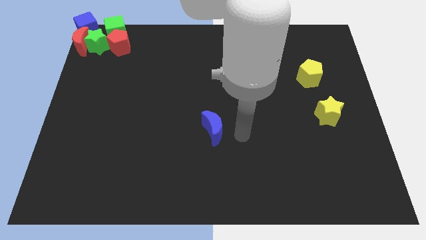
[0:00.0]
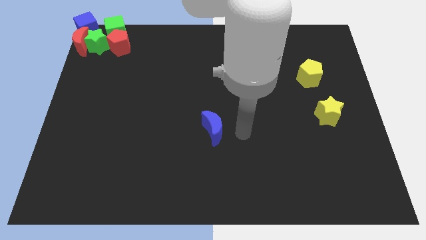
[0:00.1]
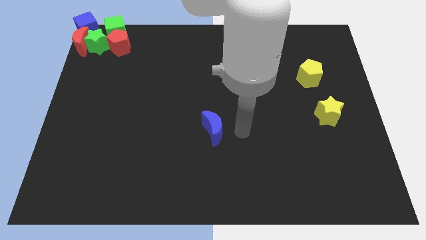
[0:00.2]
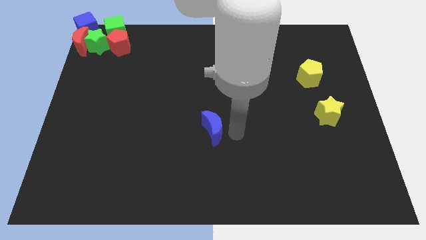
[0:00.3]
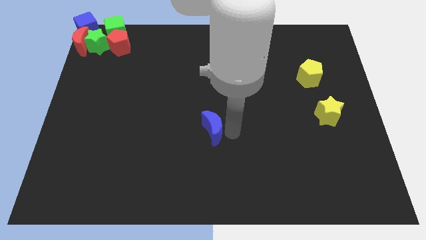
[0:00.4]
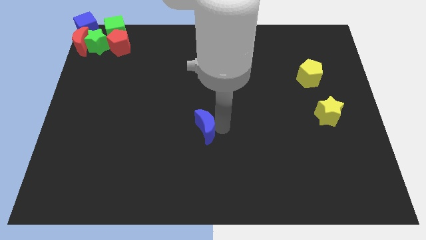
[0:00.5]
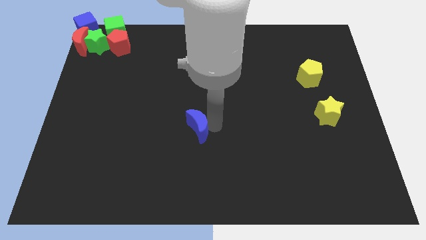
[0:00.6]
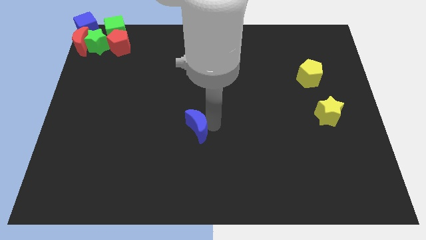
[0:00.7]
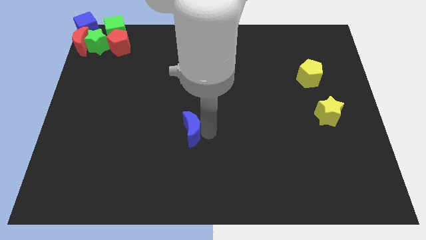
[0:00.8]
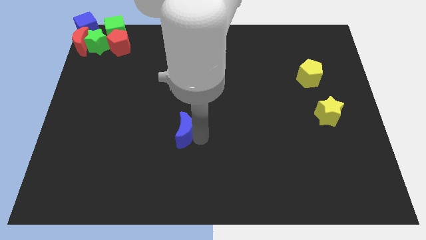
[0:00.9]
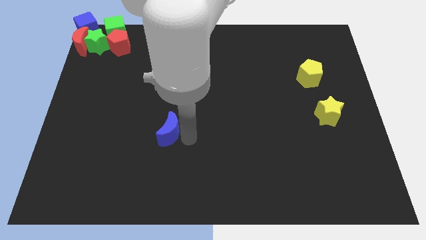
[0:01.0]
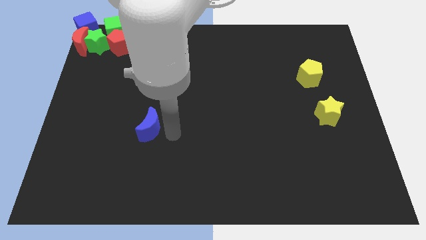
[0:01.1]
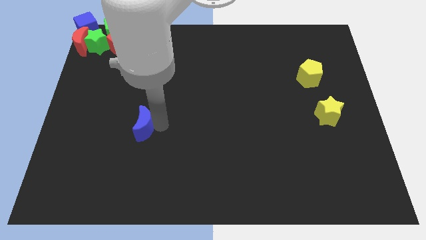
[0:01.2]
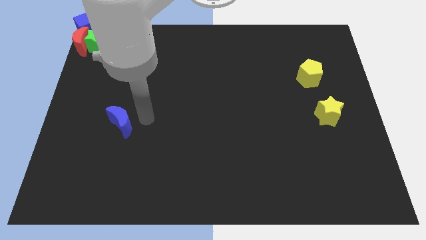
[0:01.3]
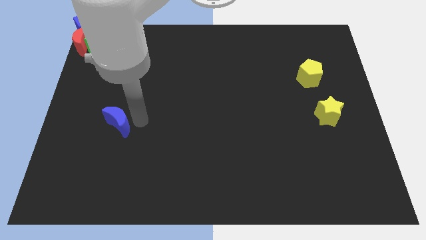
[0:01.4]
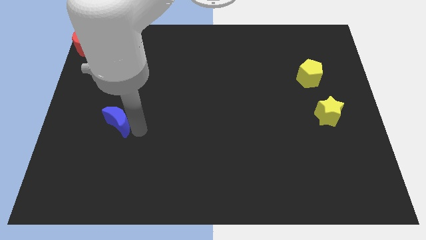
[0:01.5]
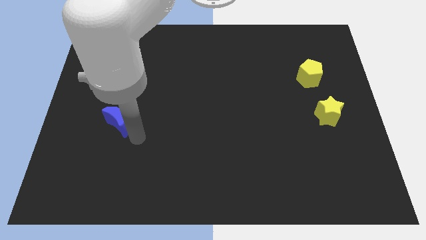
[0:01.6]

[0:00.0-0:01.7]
move the blue moon to the center left

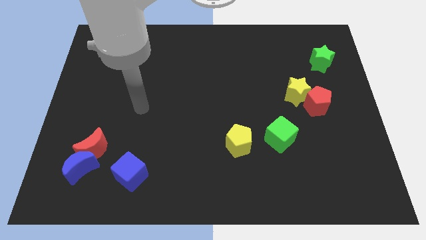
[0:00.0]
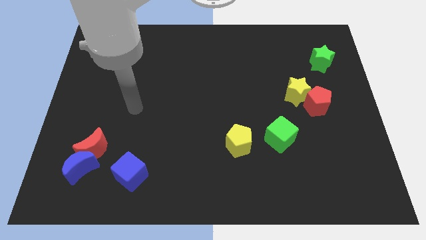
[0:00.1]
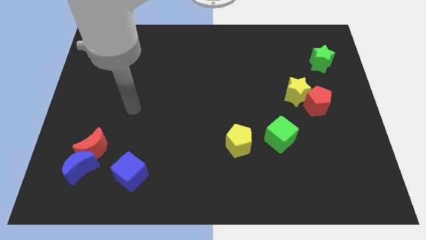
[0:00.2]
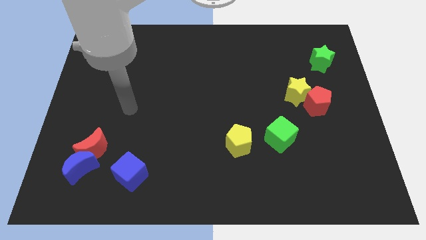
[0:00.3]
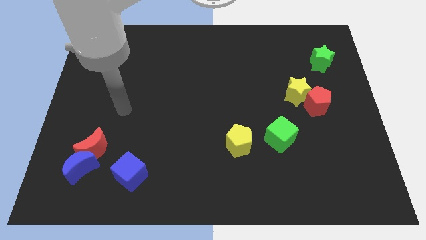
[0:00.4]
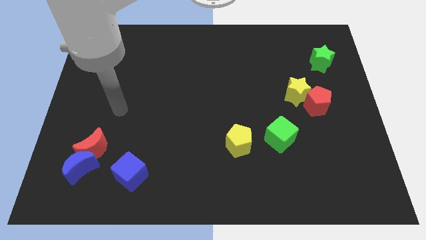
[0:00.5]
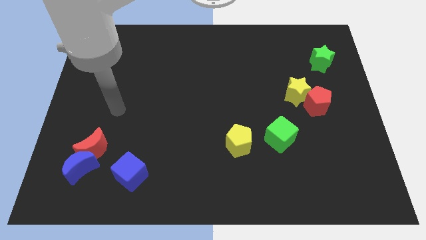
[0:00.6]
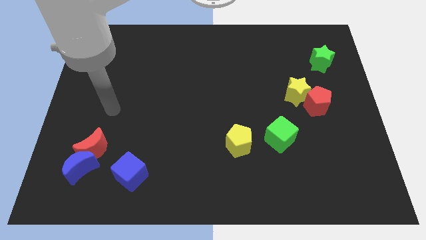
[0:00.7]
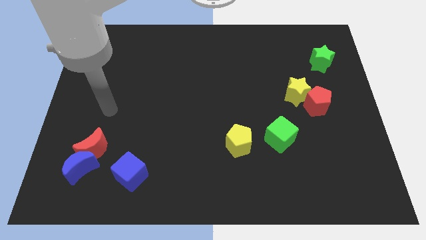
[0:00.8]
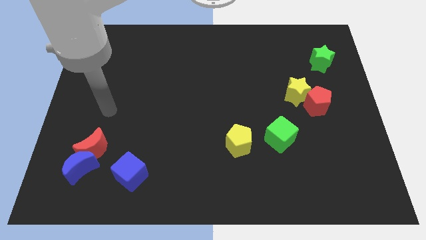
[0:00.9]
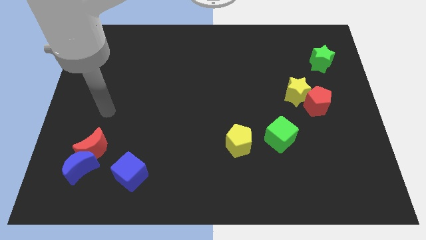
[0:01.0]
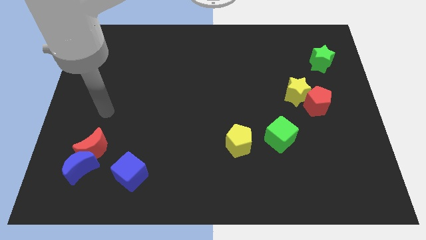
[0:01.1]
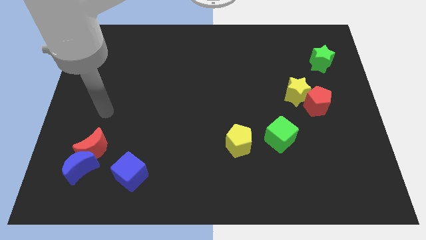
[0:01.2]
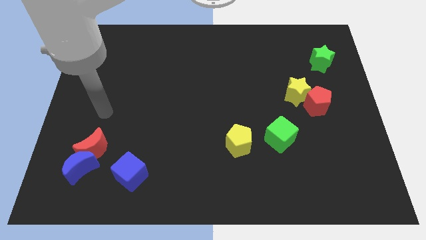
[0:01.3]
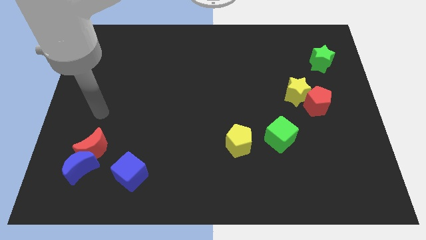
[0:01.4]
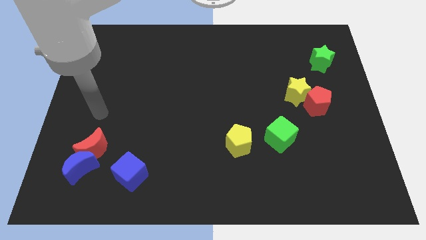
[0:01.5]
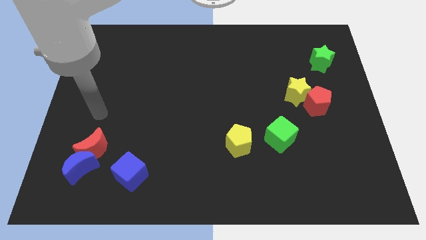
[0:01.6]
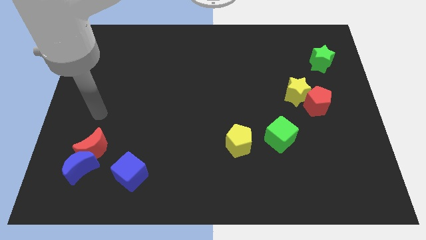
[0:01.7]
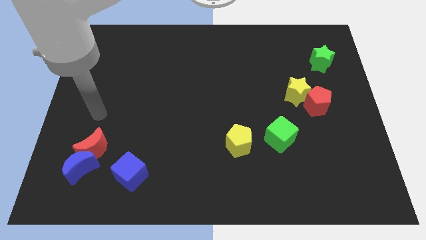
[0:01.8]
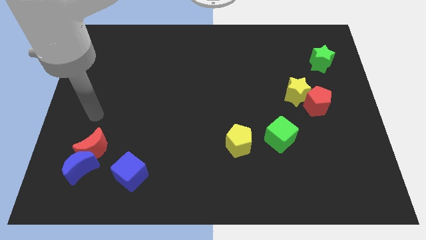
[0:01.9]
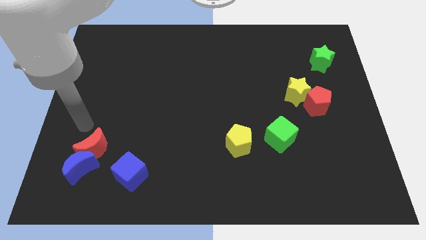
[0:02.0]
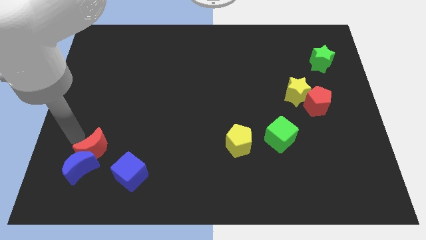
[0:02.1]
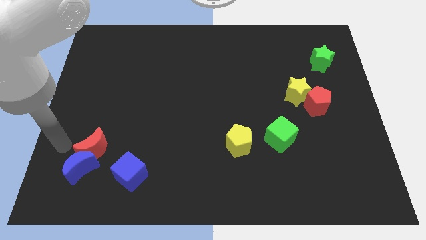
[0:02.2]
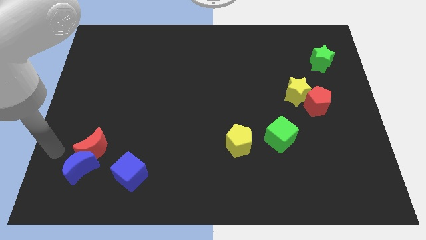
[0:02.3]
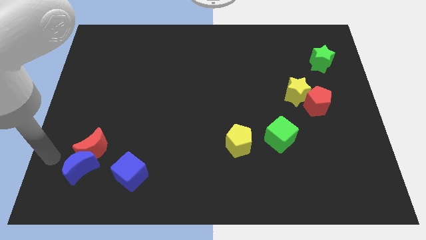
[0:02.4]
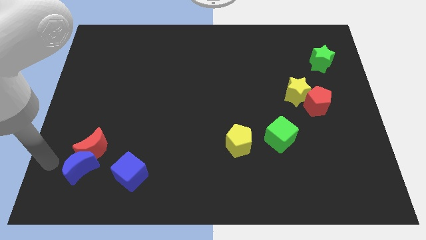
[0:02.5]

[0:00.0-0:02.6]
place your arm at the left of the blue crescent

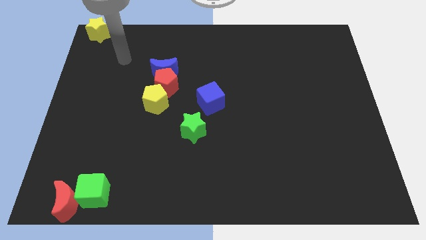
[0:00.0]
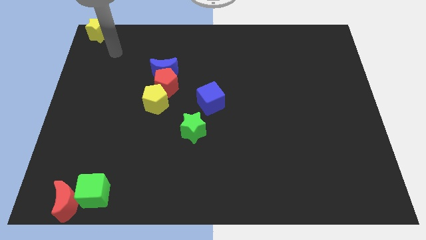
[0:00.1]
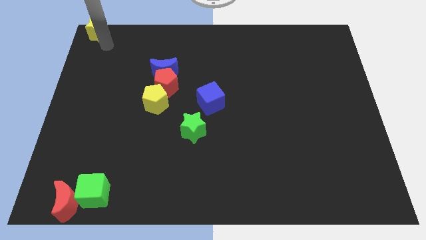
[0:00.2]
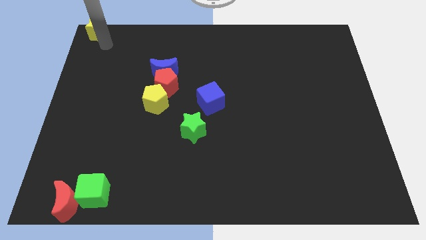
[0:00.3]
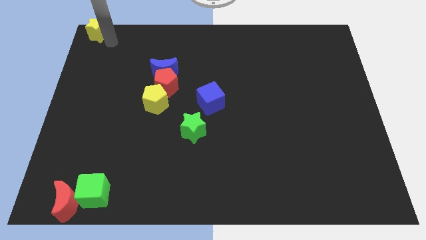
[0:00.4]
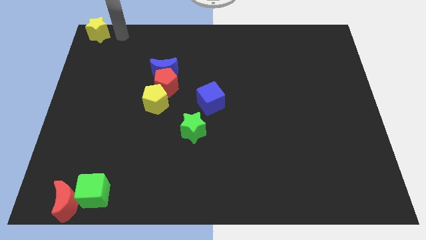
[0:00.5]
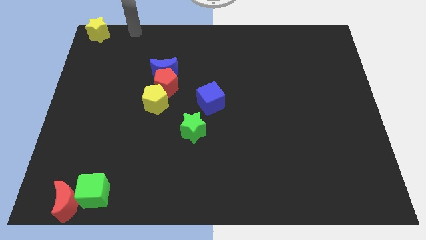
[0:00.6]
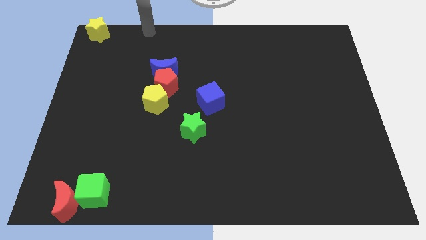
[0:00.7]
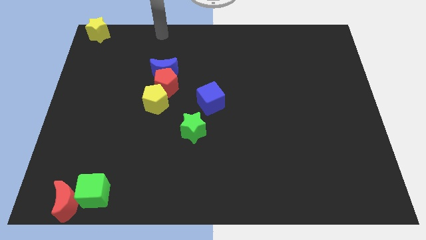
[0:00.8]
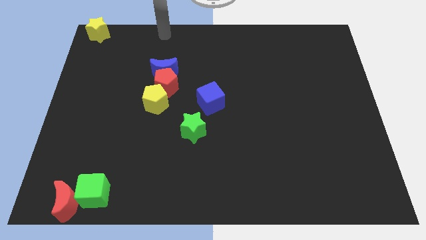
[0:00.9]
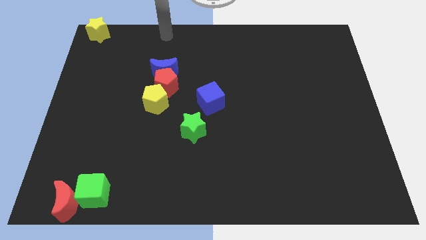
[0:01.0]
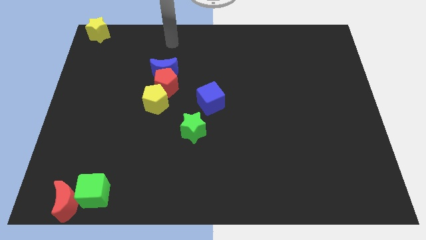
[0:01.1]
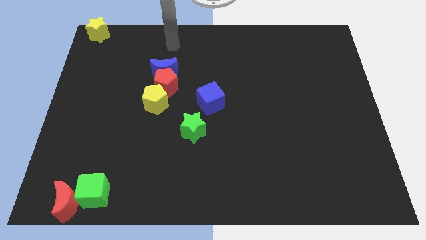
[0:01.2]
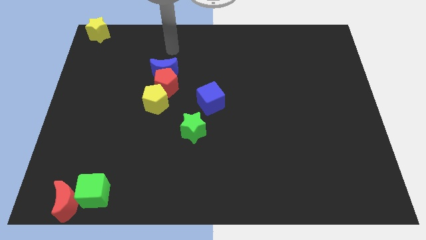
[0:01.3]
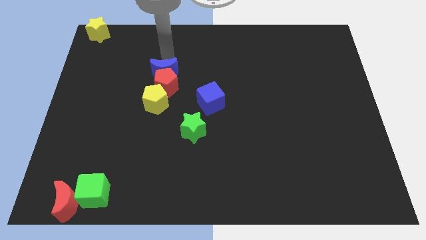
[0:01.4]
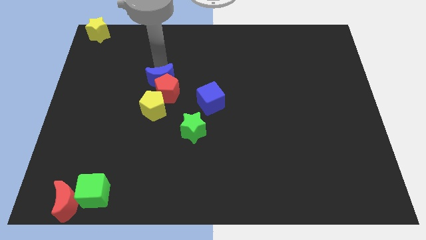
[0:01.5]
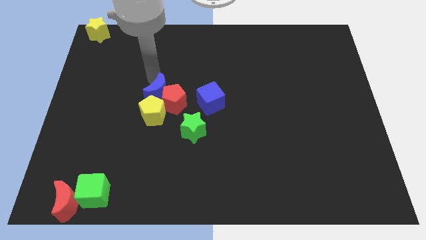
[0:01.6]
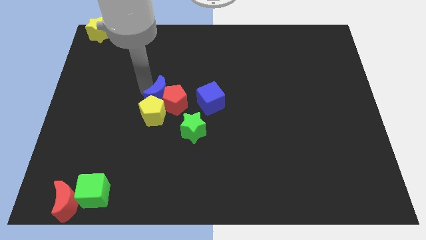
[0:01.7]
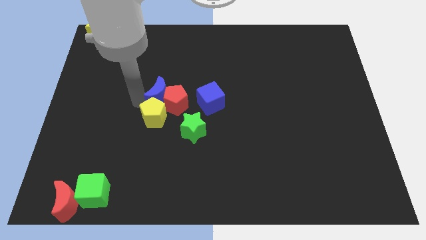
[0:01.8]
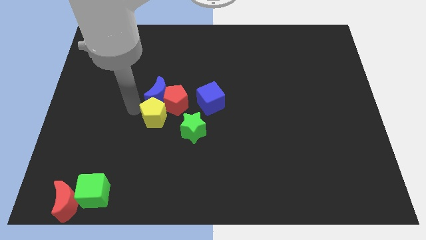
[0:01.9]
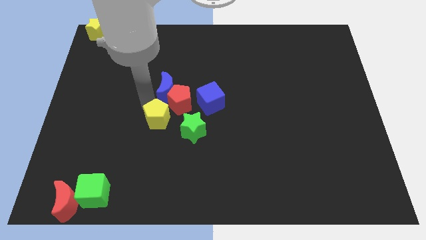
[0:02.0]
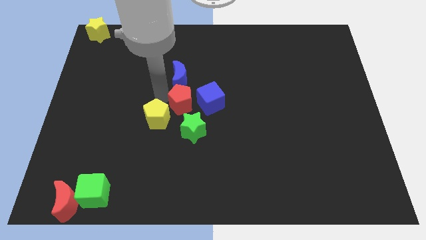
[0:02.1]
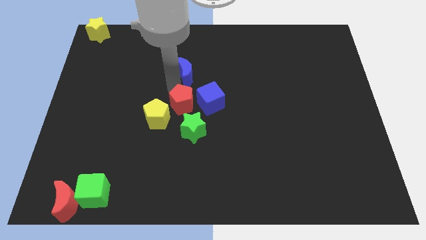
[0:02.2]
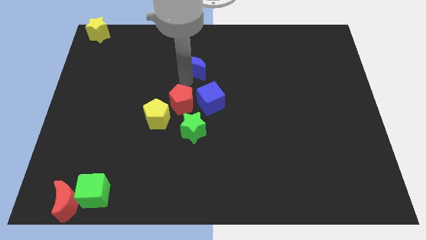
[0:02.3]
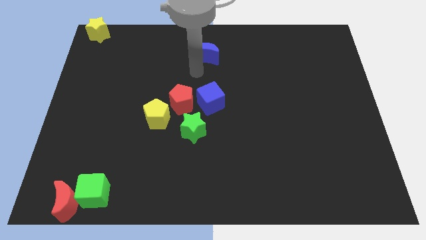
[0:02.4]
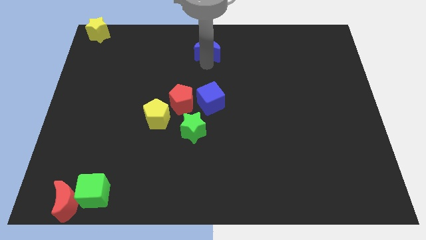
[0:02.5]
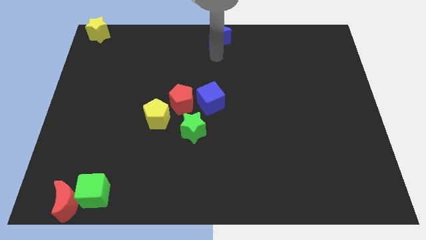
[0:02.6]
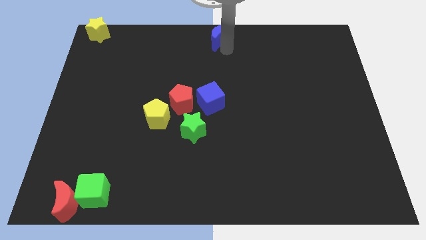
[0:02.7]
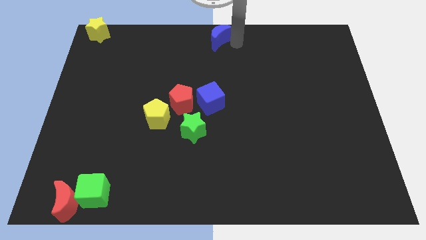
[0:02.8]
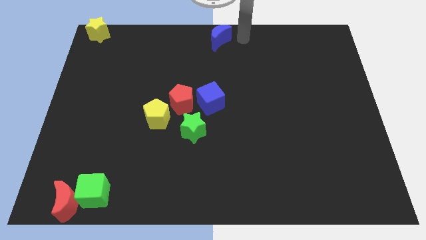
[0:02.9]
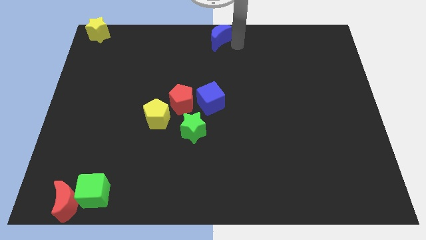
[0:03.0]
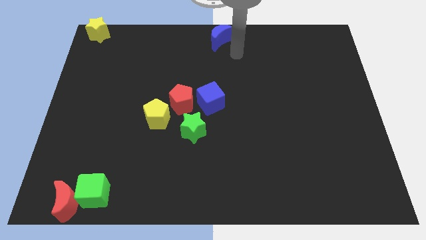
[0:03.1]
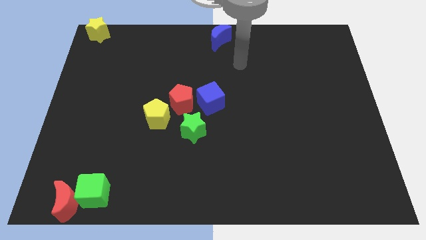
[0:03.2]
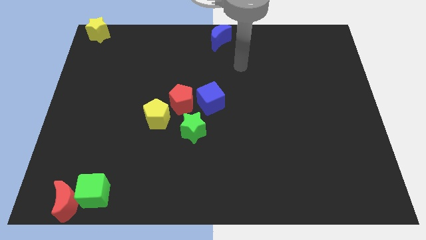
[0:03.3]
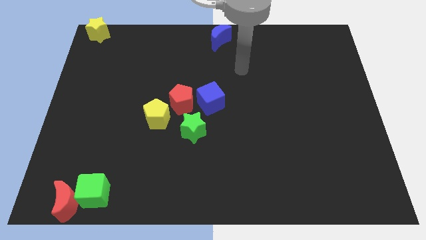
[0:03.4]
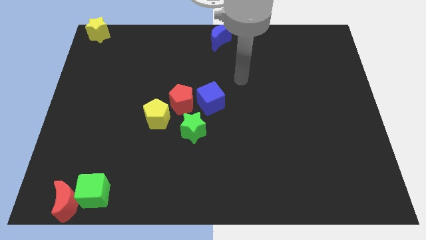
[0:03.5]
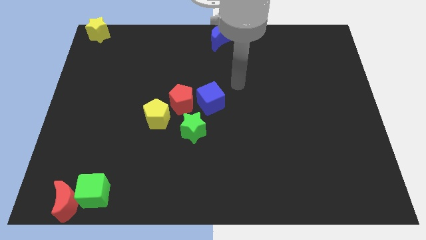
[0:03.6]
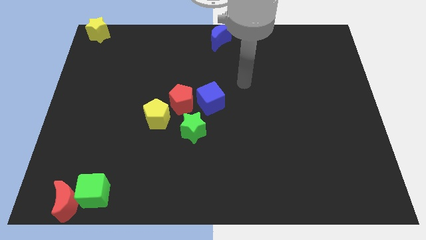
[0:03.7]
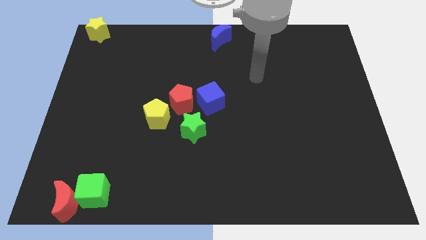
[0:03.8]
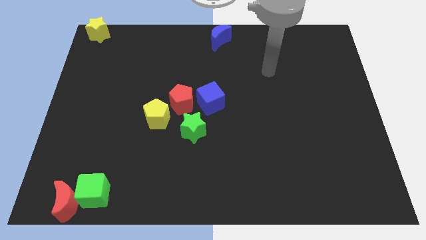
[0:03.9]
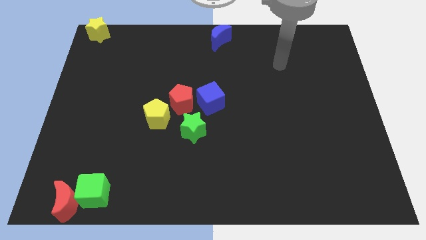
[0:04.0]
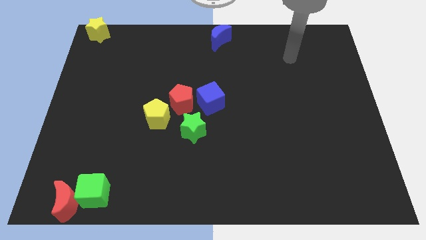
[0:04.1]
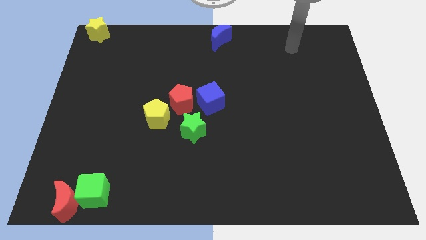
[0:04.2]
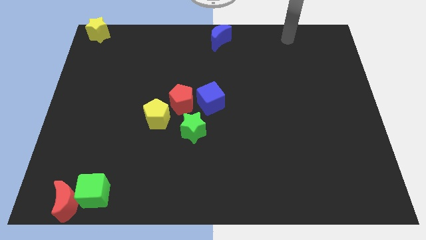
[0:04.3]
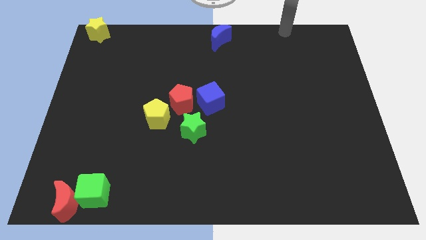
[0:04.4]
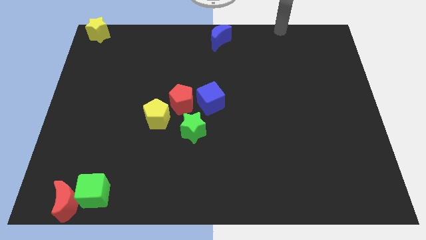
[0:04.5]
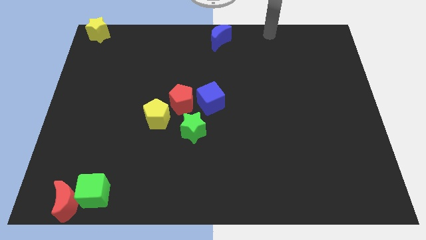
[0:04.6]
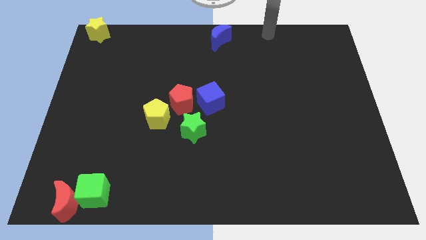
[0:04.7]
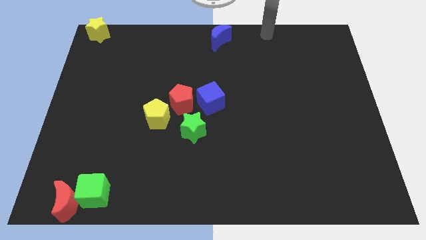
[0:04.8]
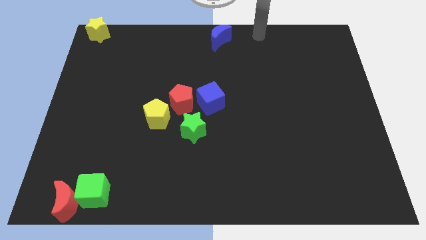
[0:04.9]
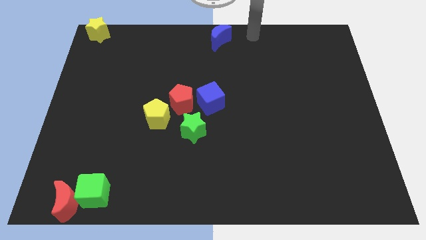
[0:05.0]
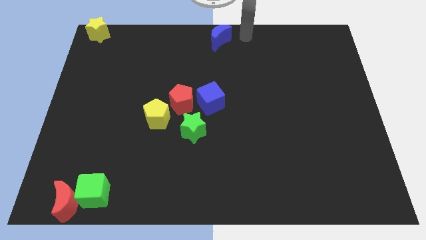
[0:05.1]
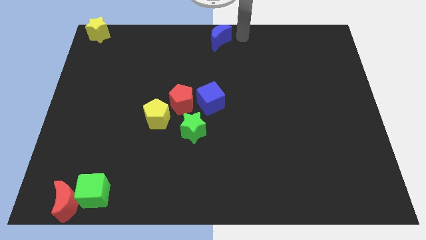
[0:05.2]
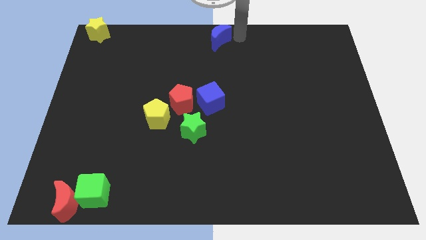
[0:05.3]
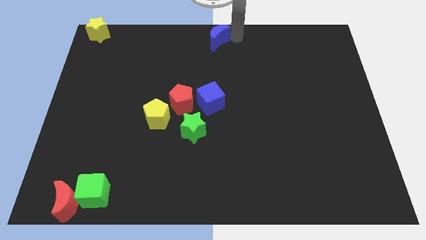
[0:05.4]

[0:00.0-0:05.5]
place the blue moon at the top center of the board
